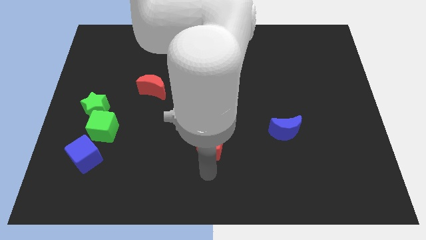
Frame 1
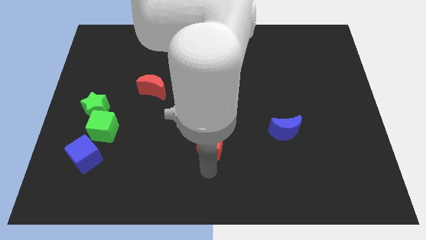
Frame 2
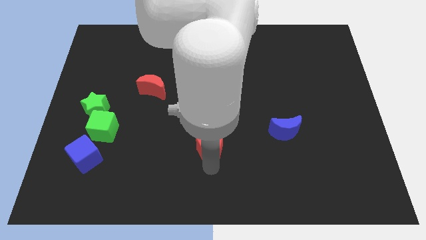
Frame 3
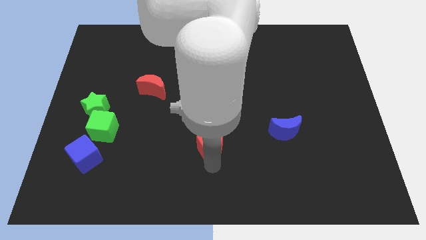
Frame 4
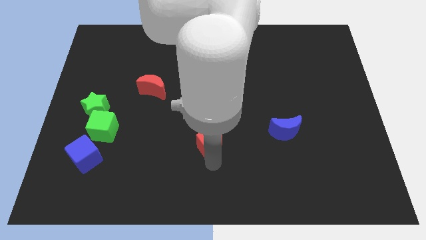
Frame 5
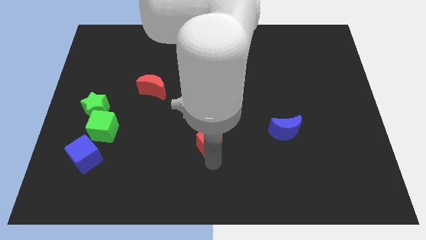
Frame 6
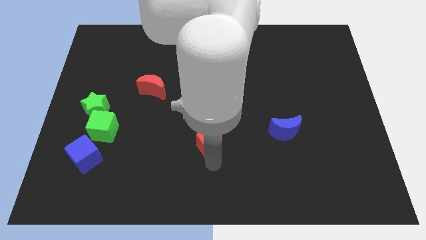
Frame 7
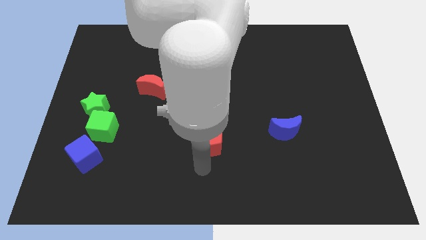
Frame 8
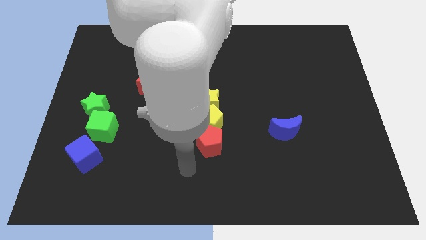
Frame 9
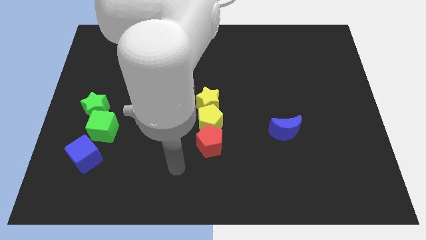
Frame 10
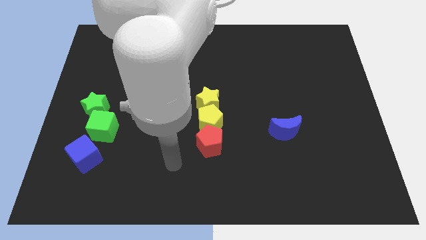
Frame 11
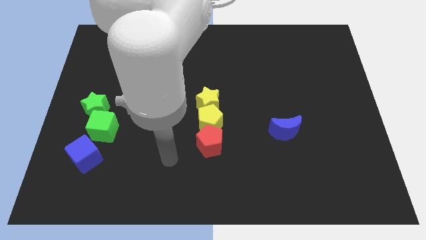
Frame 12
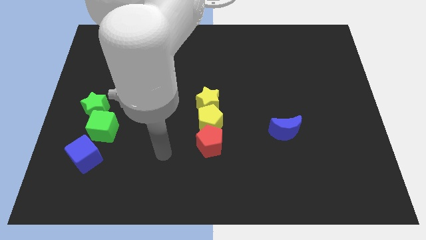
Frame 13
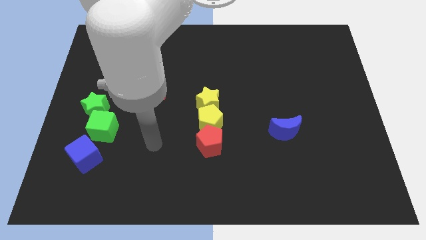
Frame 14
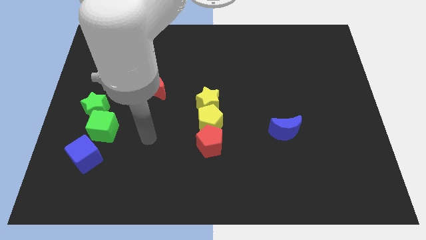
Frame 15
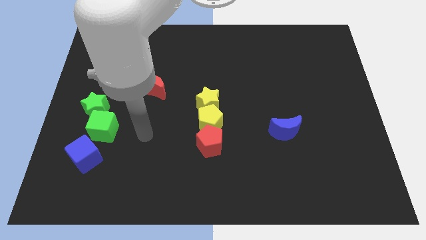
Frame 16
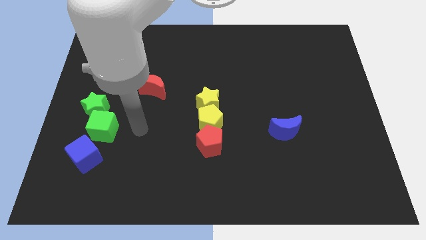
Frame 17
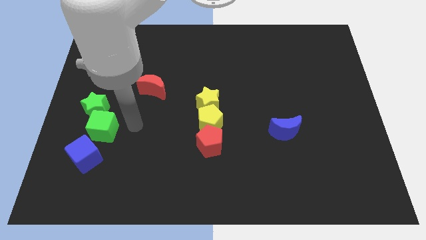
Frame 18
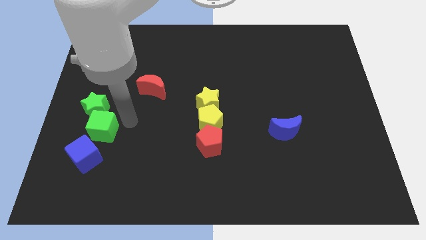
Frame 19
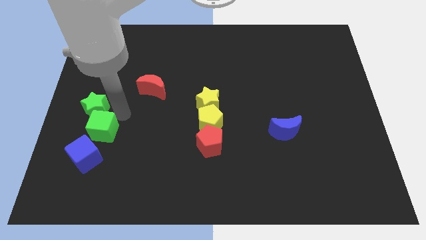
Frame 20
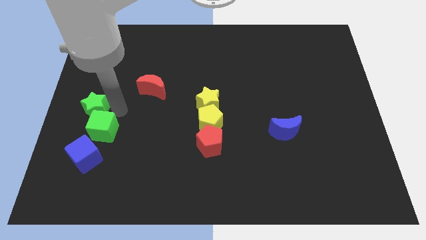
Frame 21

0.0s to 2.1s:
move yourself away from the red pentagon

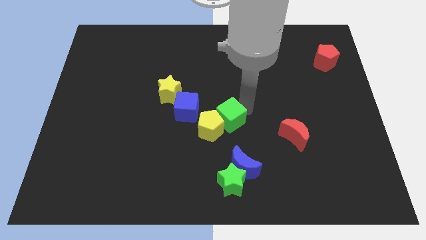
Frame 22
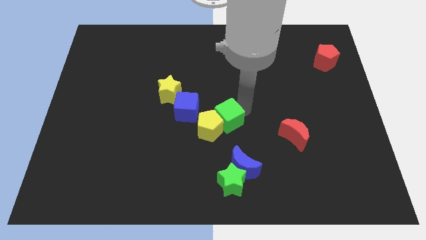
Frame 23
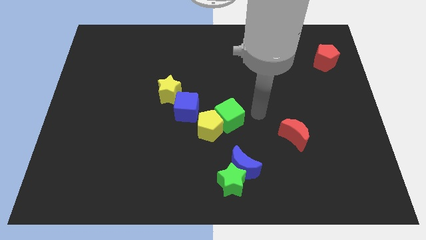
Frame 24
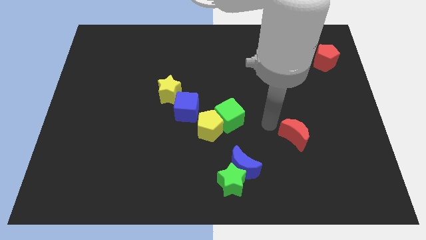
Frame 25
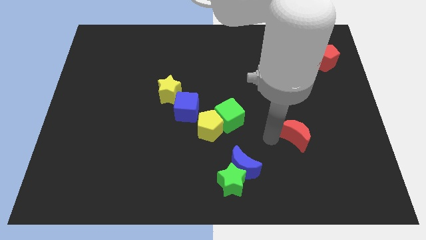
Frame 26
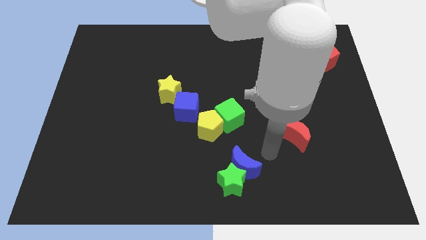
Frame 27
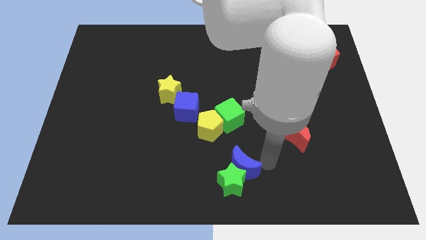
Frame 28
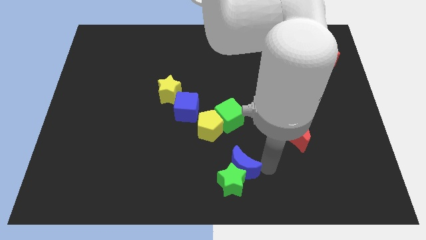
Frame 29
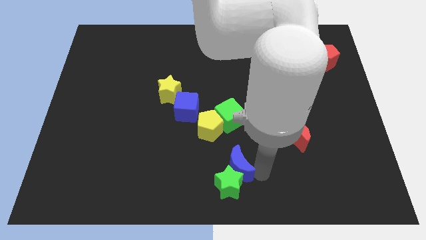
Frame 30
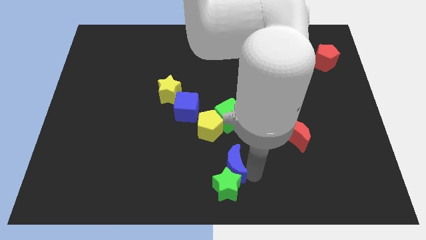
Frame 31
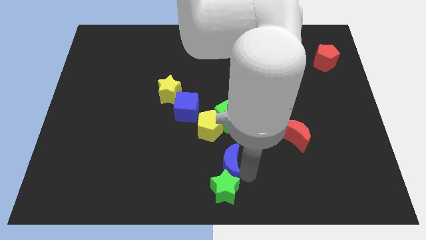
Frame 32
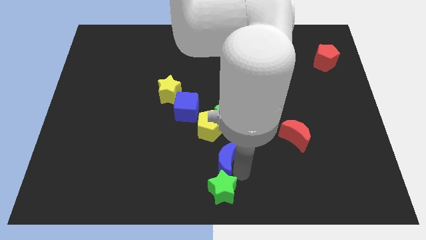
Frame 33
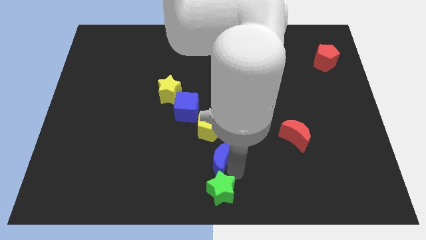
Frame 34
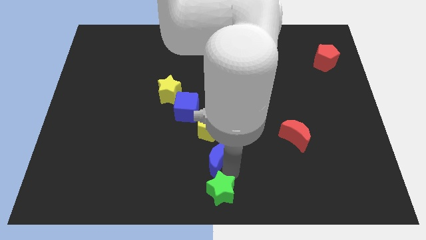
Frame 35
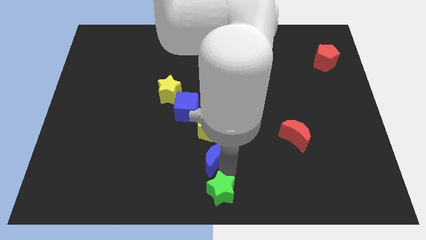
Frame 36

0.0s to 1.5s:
move your arm away green cube

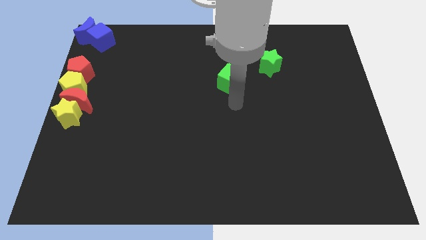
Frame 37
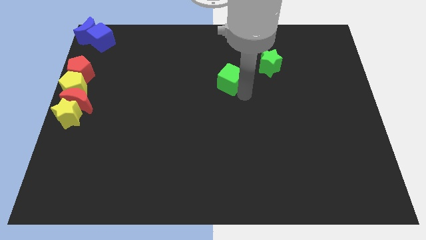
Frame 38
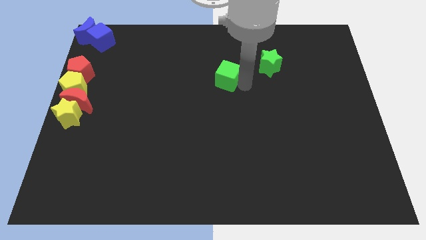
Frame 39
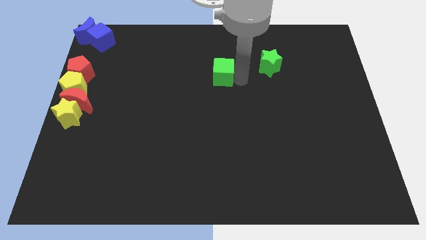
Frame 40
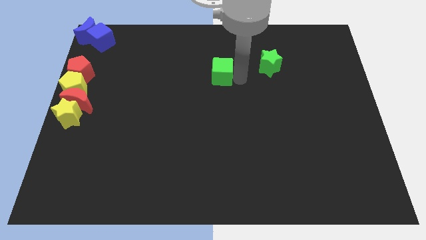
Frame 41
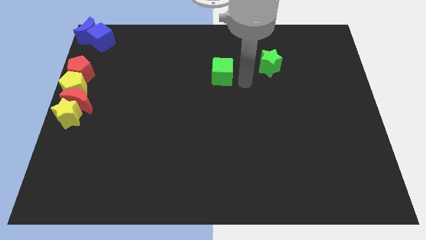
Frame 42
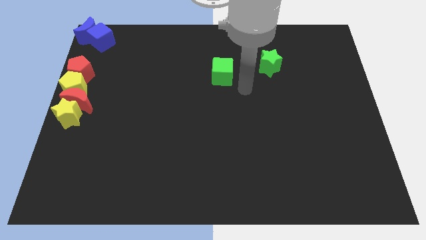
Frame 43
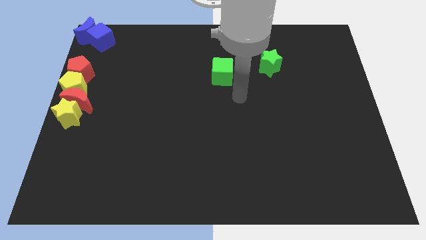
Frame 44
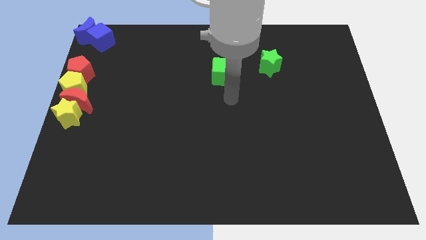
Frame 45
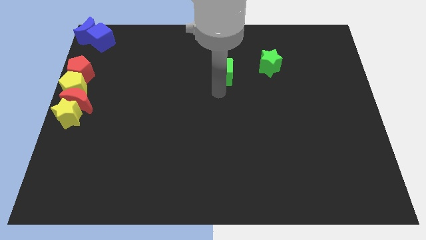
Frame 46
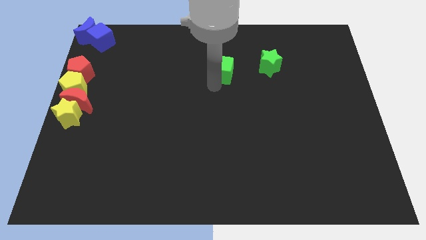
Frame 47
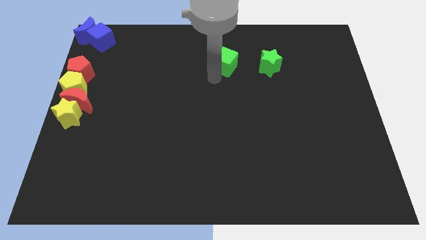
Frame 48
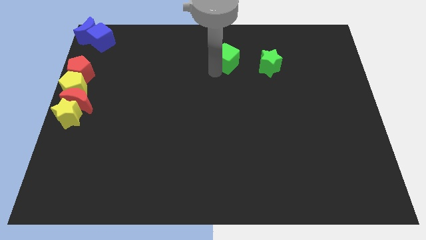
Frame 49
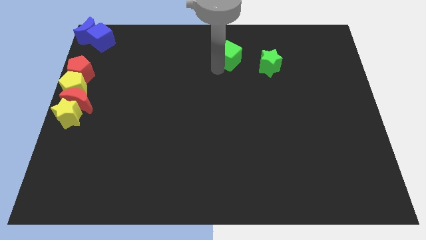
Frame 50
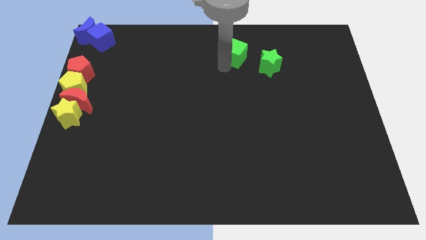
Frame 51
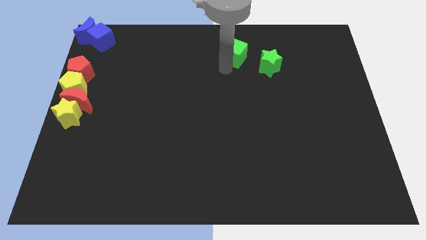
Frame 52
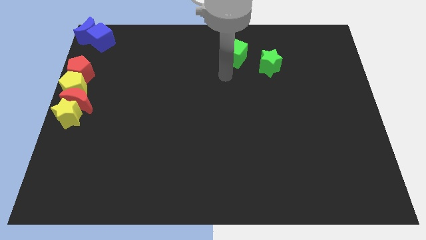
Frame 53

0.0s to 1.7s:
push the green cube left to the green star

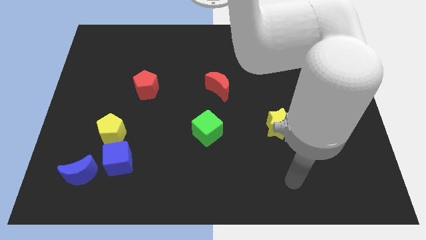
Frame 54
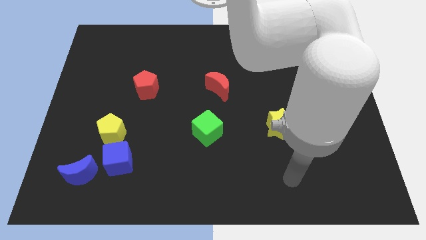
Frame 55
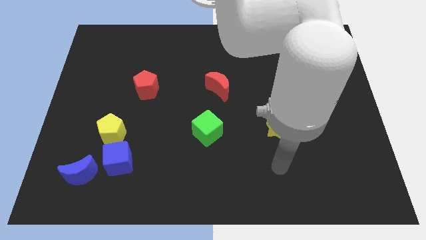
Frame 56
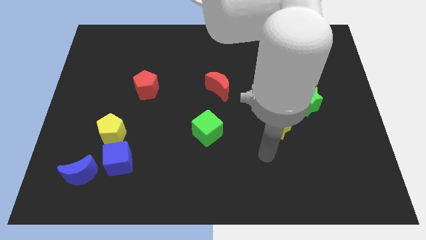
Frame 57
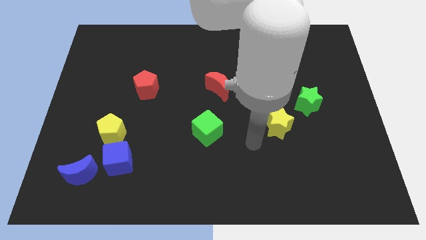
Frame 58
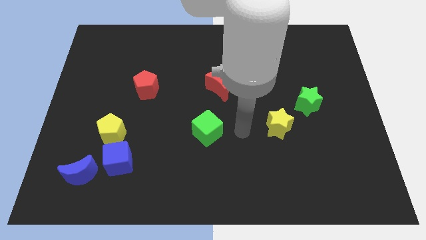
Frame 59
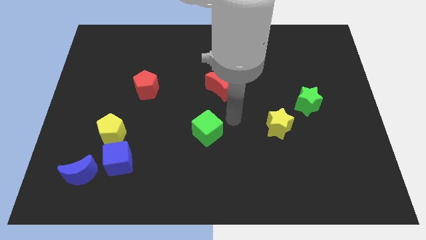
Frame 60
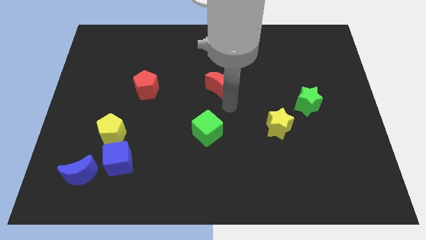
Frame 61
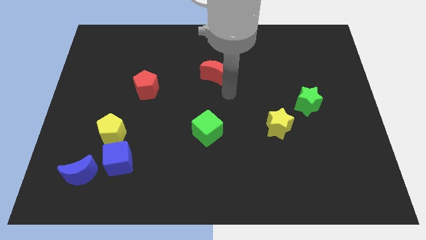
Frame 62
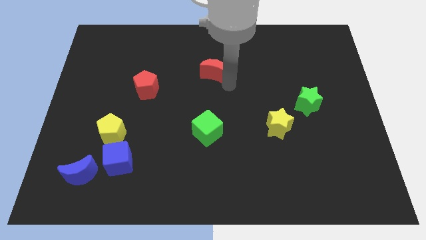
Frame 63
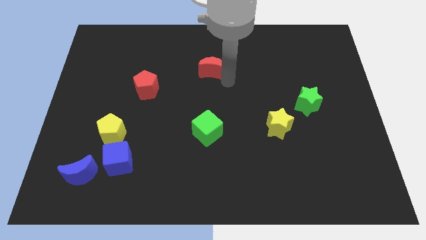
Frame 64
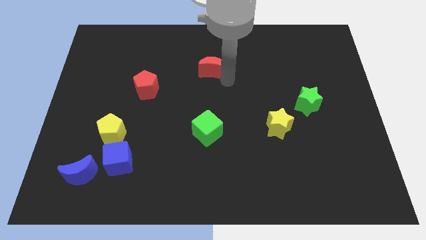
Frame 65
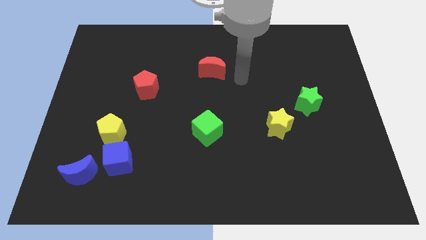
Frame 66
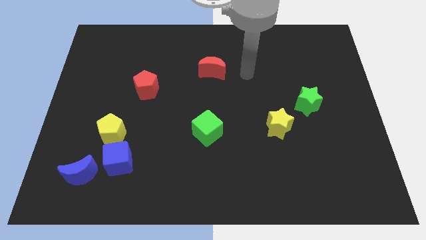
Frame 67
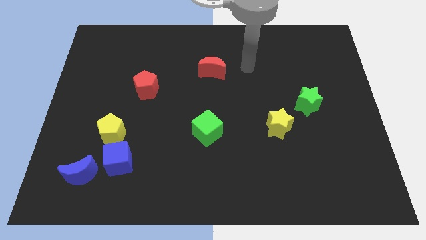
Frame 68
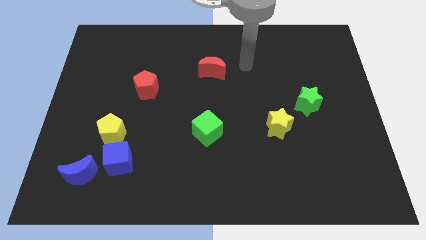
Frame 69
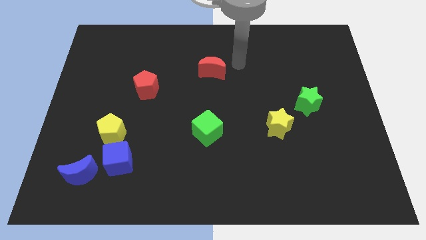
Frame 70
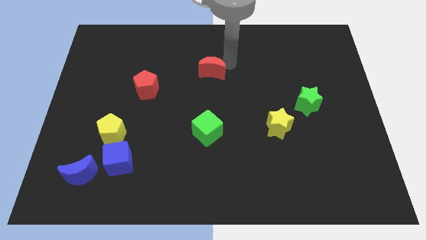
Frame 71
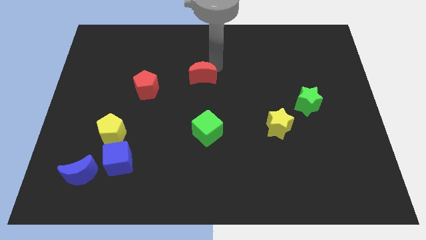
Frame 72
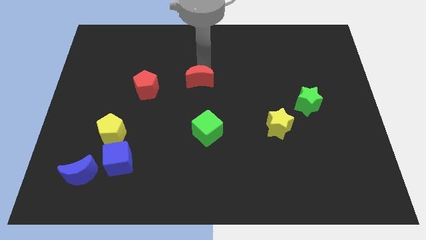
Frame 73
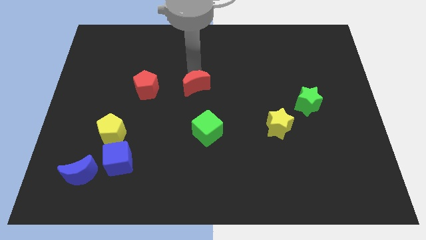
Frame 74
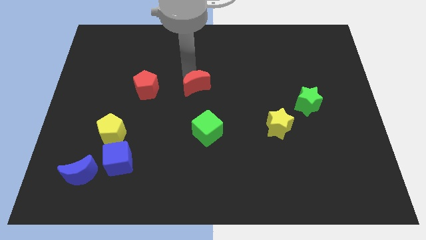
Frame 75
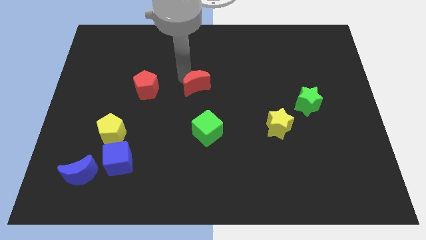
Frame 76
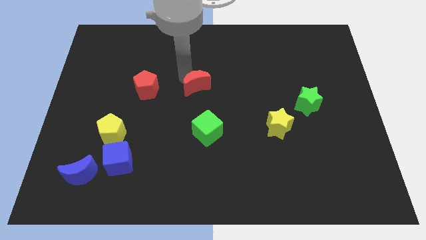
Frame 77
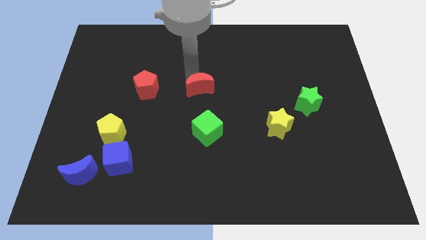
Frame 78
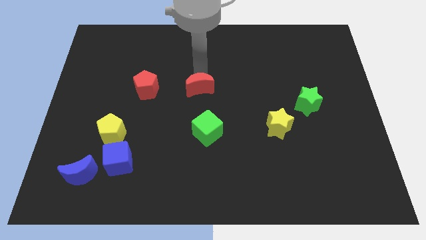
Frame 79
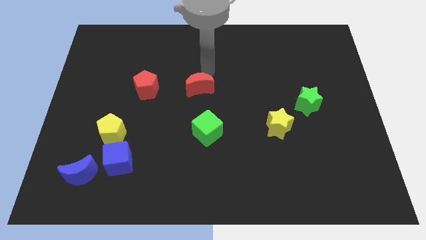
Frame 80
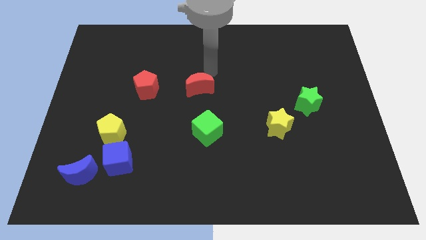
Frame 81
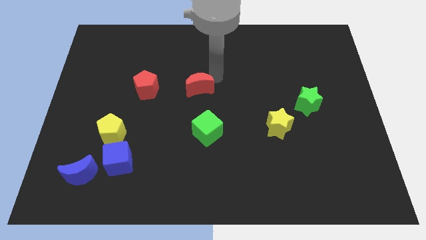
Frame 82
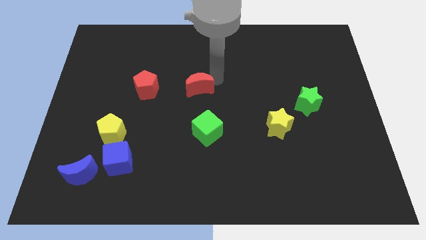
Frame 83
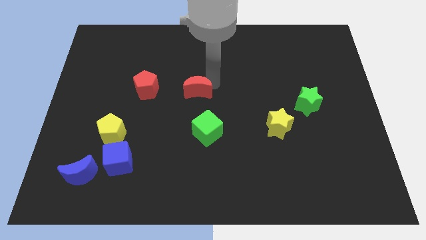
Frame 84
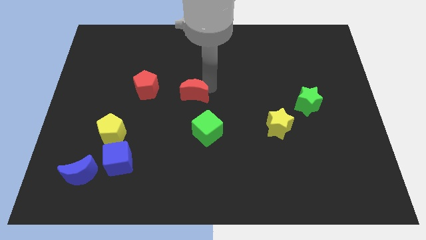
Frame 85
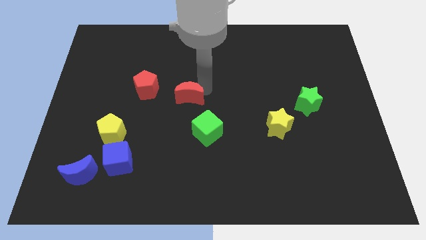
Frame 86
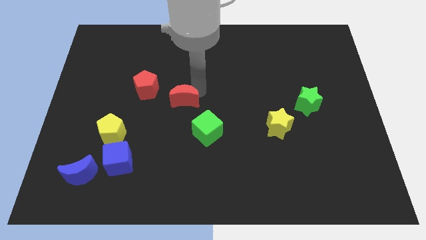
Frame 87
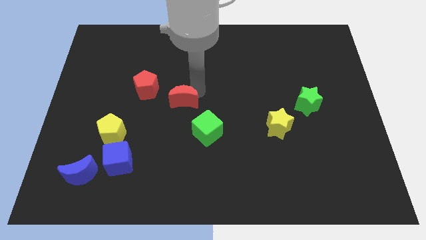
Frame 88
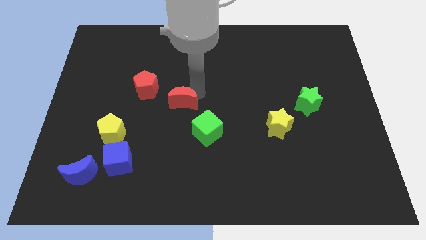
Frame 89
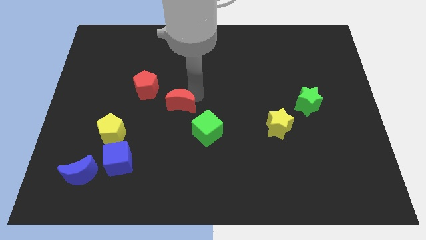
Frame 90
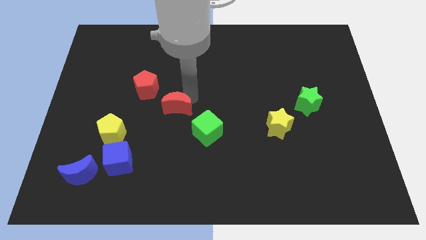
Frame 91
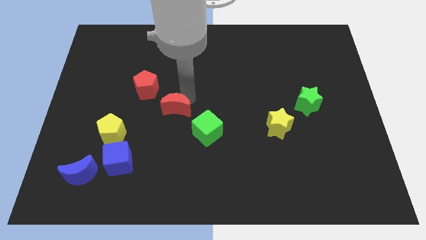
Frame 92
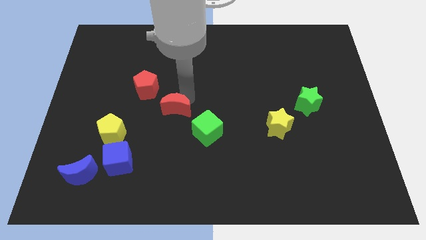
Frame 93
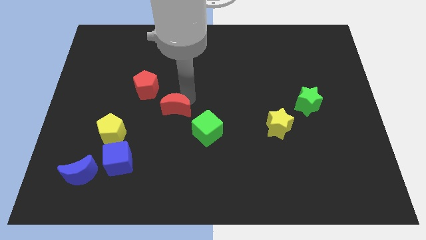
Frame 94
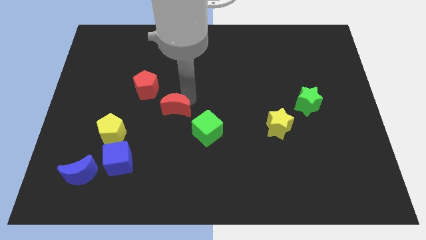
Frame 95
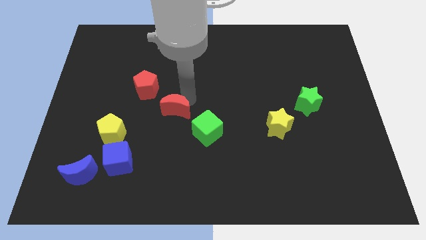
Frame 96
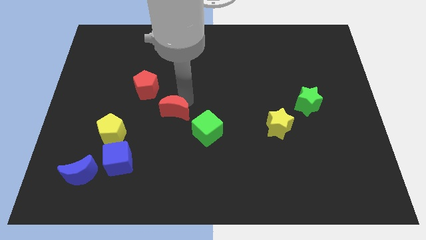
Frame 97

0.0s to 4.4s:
push the red moon downwards slightly
